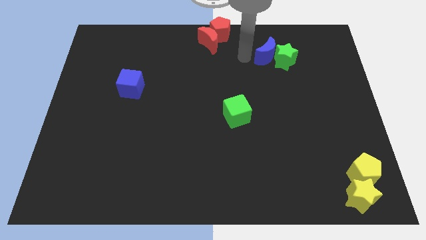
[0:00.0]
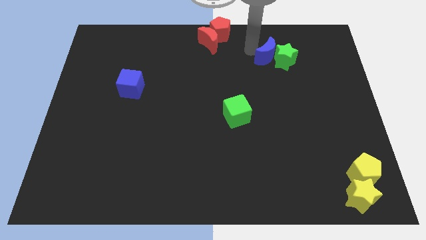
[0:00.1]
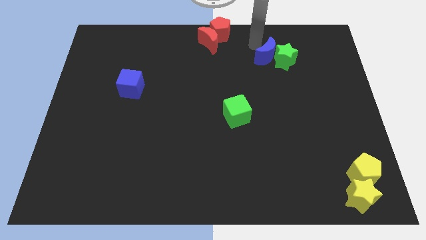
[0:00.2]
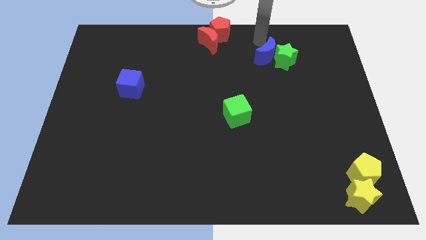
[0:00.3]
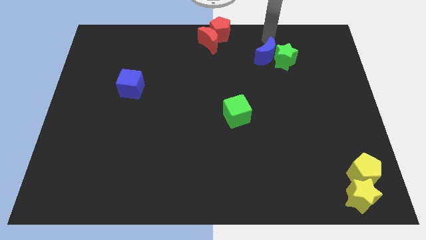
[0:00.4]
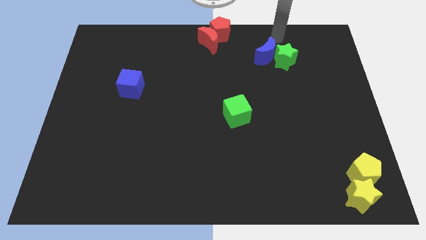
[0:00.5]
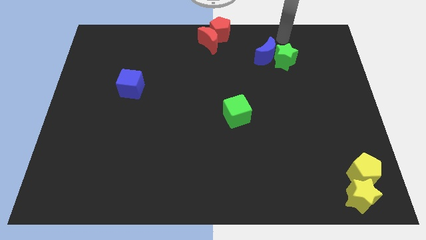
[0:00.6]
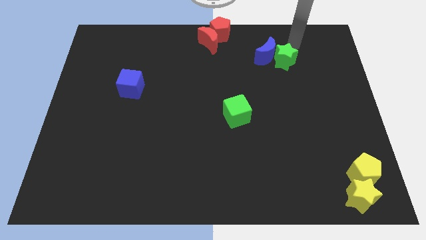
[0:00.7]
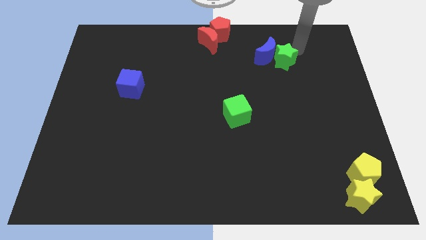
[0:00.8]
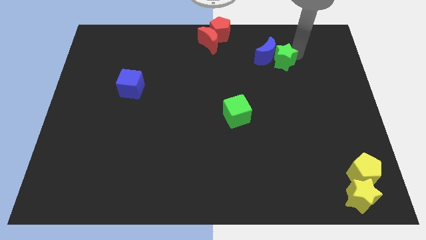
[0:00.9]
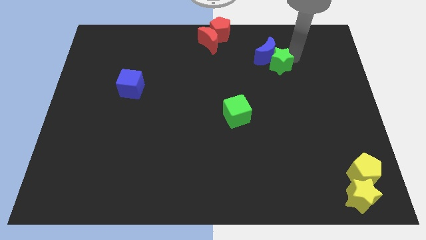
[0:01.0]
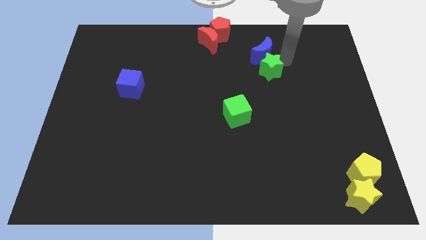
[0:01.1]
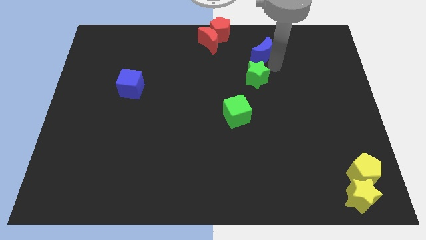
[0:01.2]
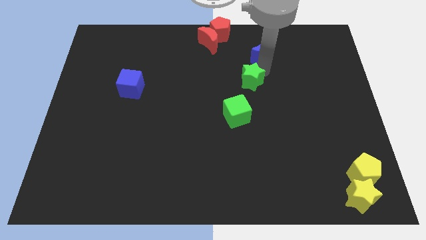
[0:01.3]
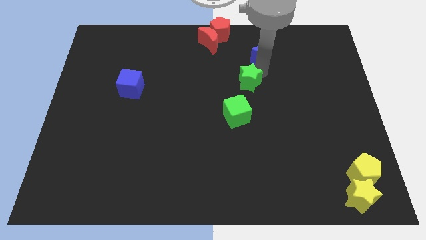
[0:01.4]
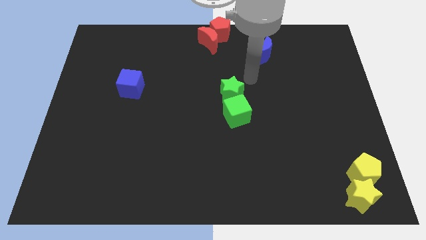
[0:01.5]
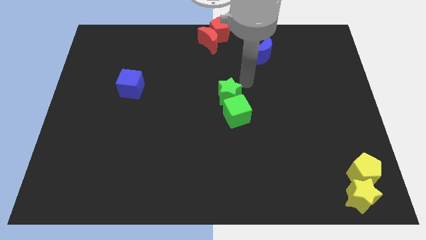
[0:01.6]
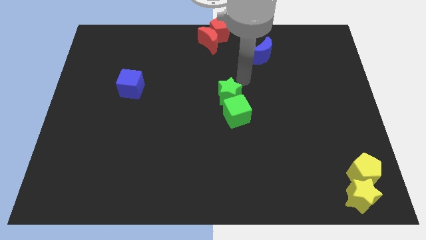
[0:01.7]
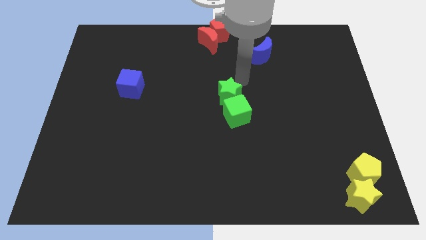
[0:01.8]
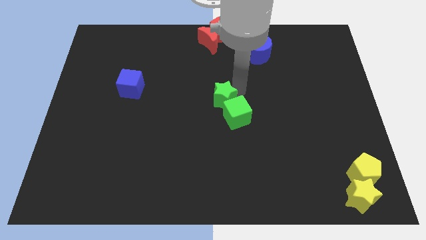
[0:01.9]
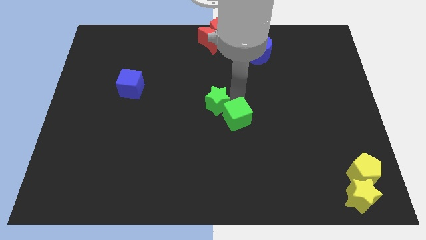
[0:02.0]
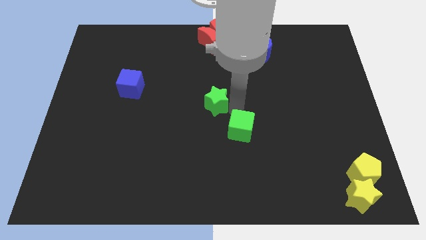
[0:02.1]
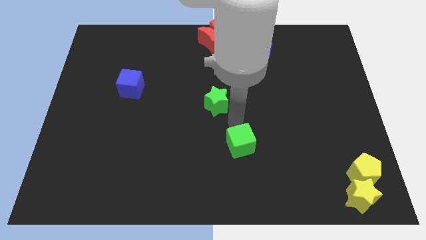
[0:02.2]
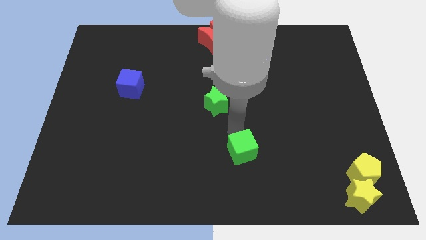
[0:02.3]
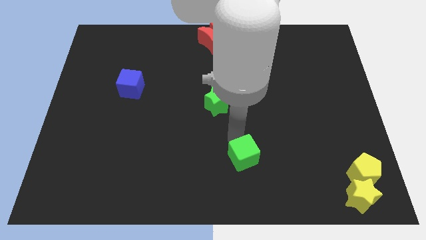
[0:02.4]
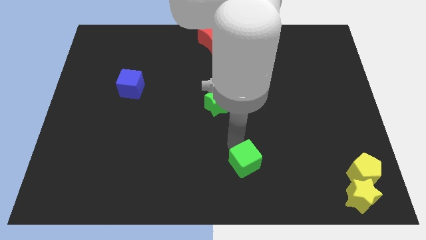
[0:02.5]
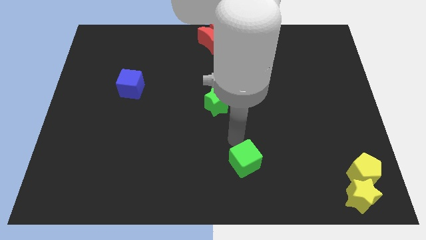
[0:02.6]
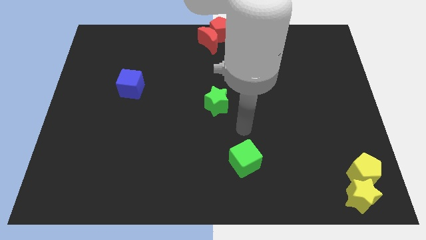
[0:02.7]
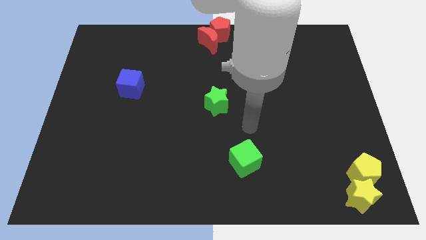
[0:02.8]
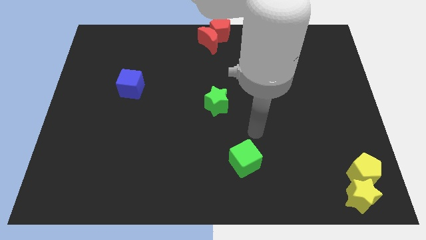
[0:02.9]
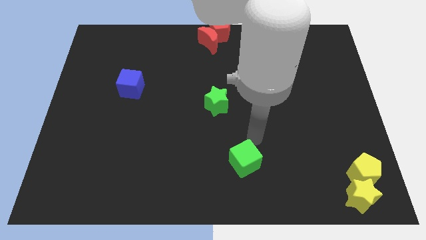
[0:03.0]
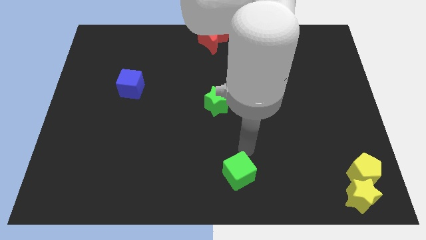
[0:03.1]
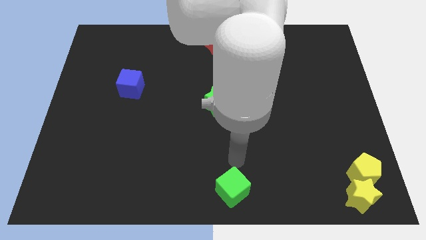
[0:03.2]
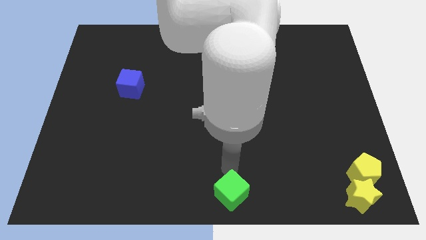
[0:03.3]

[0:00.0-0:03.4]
move the green cube to the bottom center

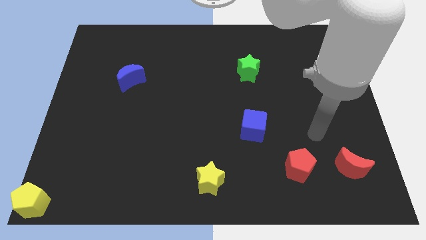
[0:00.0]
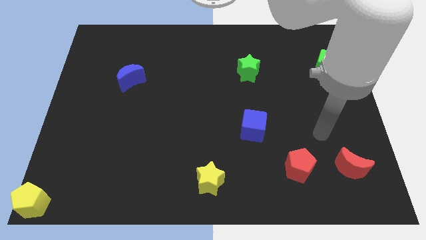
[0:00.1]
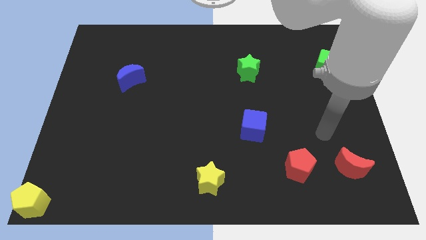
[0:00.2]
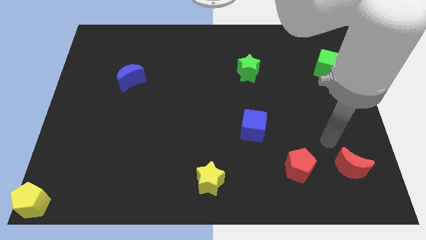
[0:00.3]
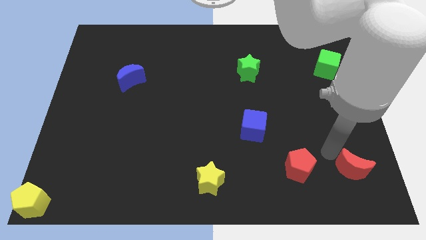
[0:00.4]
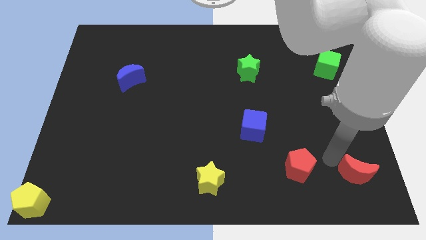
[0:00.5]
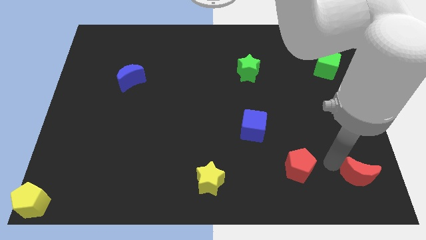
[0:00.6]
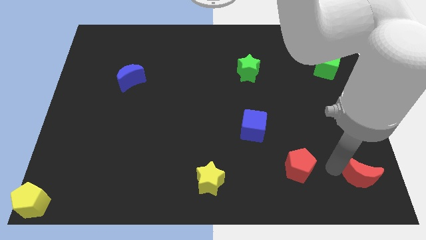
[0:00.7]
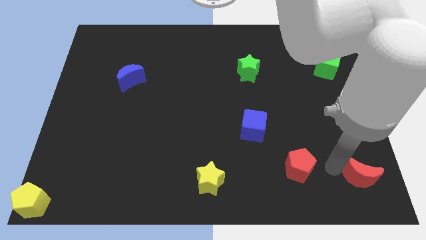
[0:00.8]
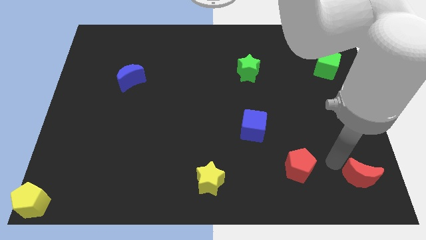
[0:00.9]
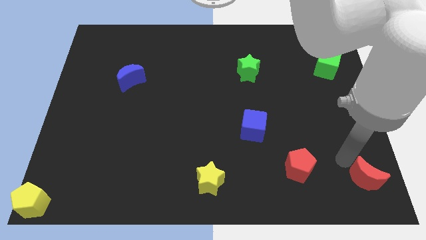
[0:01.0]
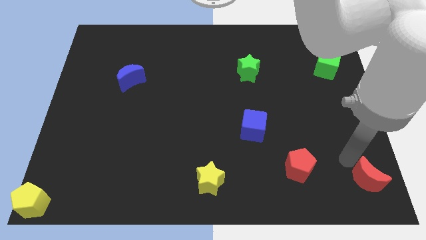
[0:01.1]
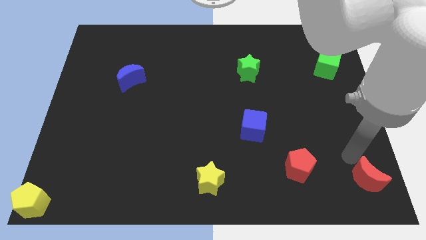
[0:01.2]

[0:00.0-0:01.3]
push the red crescent to the bottom right of the board

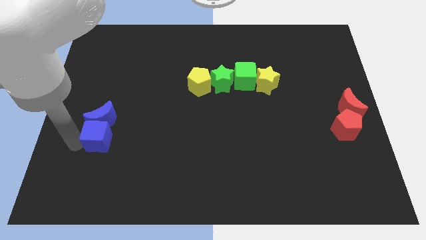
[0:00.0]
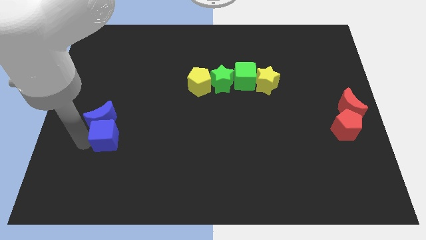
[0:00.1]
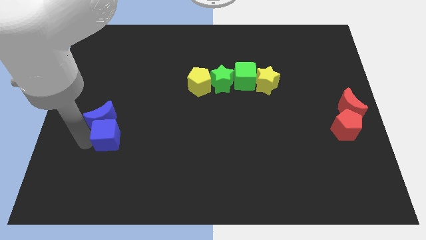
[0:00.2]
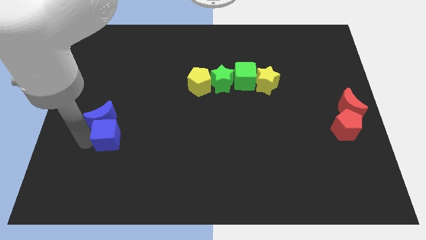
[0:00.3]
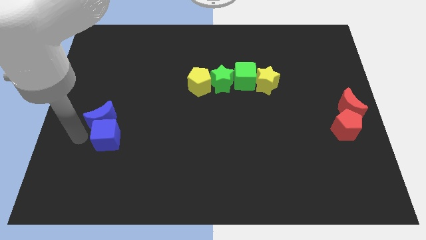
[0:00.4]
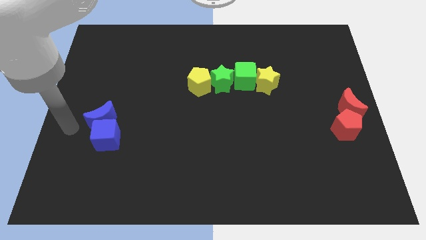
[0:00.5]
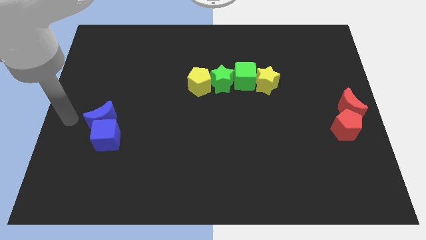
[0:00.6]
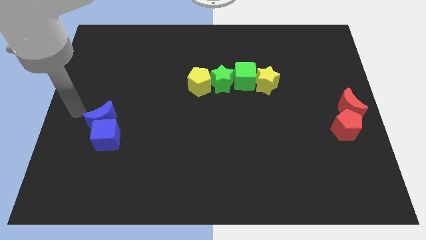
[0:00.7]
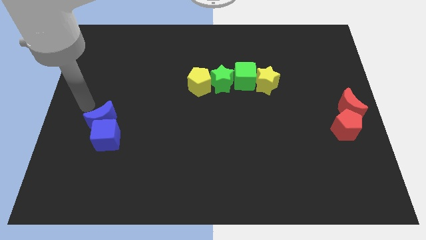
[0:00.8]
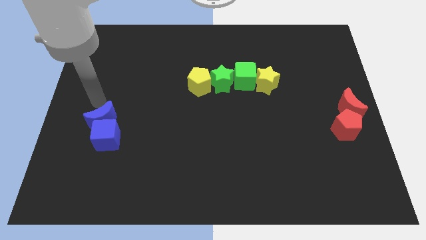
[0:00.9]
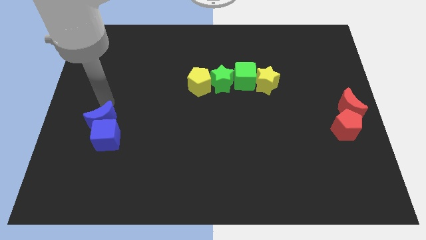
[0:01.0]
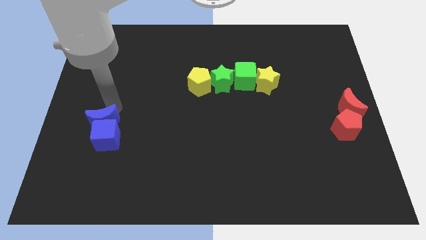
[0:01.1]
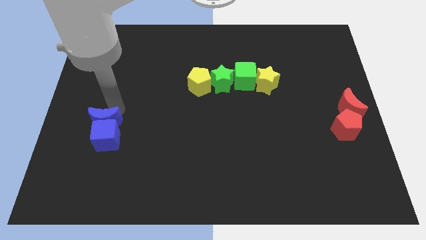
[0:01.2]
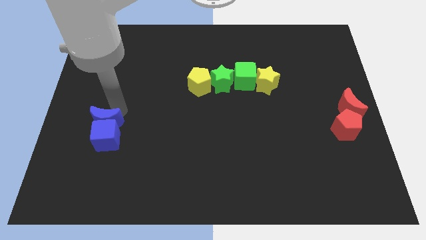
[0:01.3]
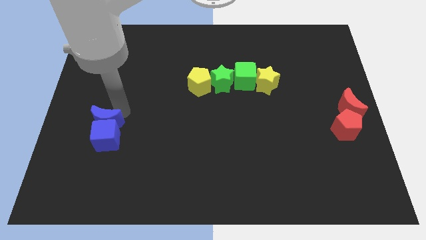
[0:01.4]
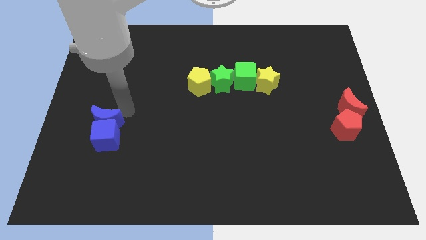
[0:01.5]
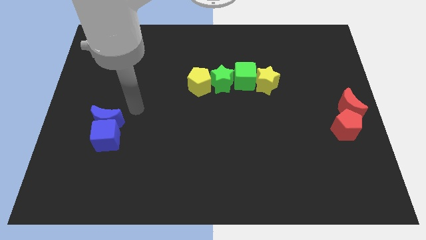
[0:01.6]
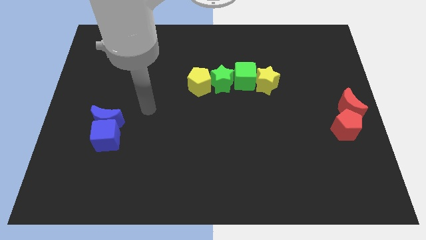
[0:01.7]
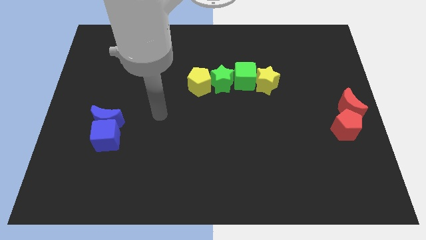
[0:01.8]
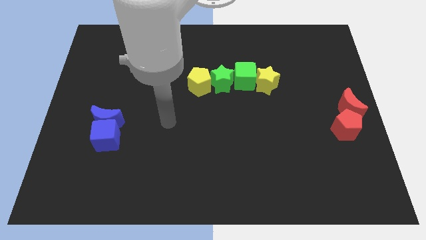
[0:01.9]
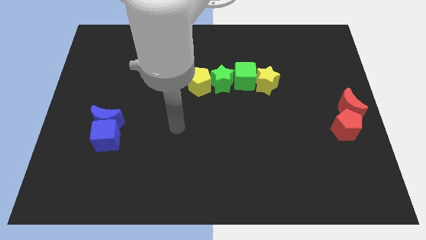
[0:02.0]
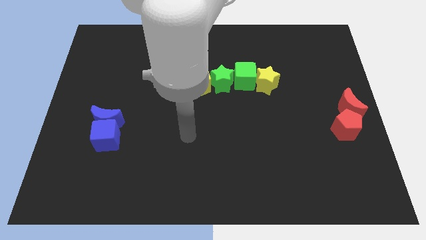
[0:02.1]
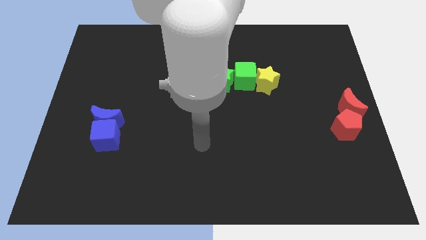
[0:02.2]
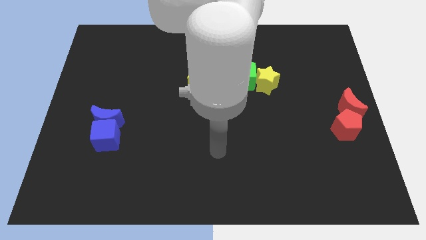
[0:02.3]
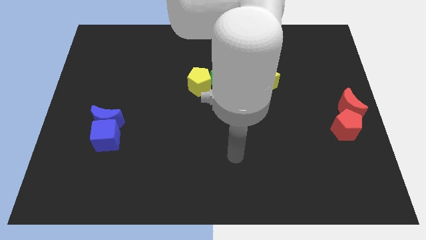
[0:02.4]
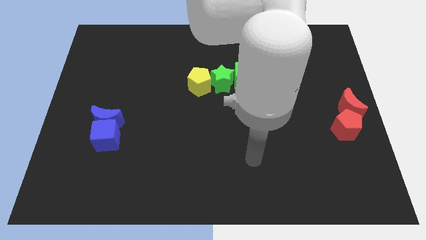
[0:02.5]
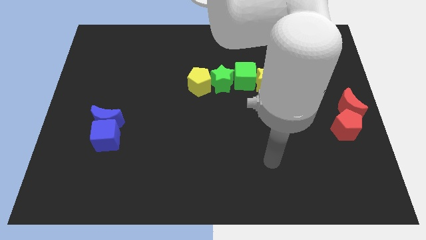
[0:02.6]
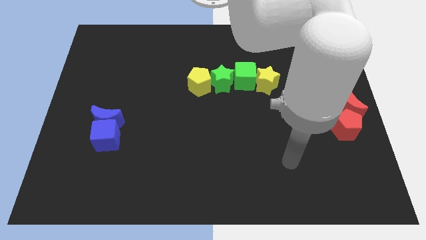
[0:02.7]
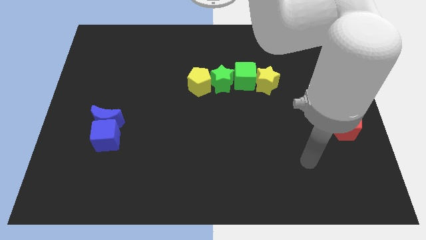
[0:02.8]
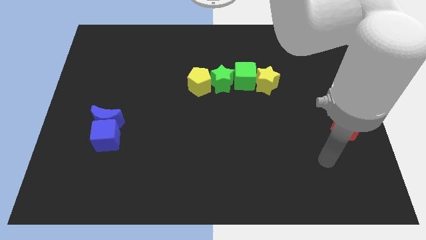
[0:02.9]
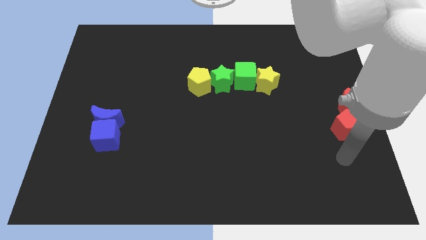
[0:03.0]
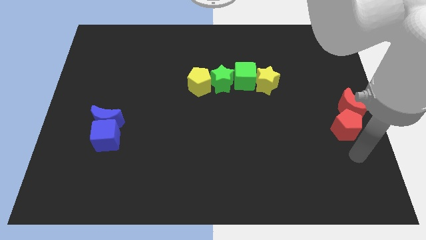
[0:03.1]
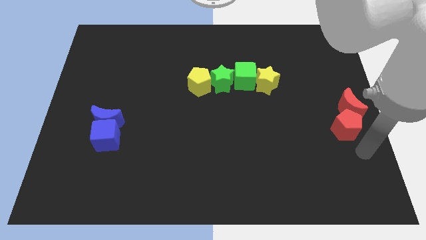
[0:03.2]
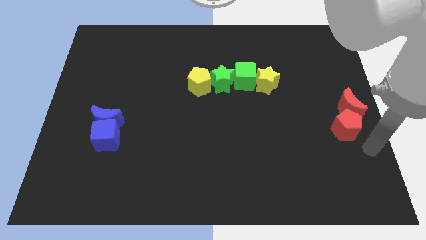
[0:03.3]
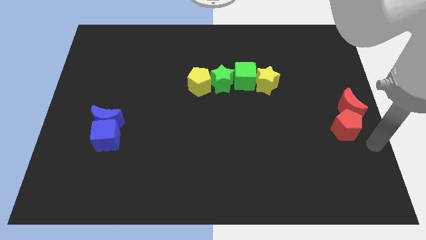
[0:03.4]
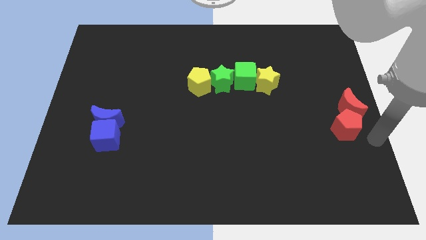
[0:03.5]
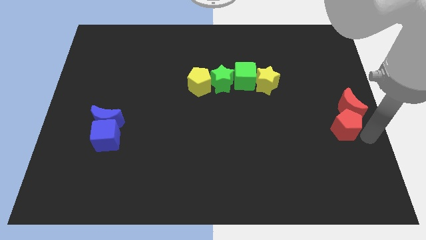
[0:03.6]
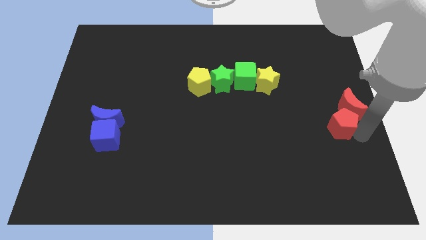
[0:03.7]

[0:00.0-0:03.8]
move your arm to the right side of the red pentagon

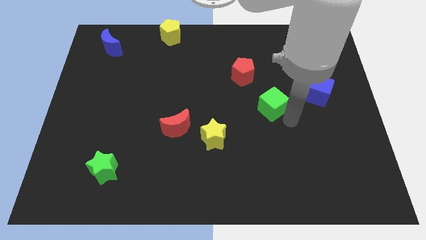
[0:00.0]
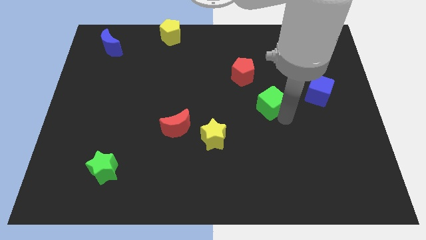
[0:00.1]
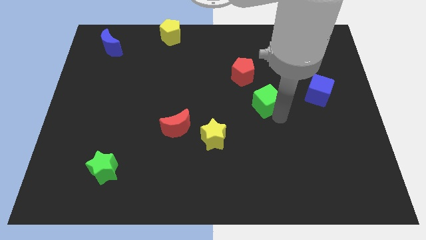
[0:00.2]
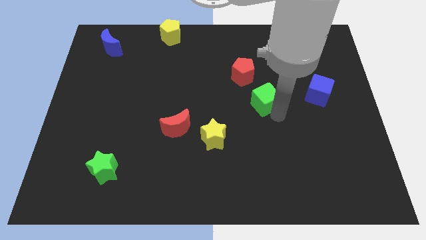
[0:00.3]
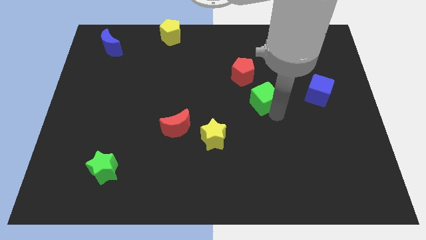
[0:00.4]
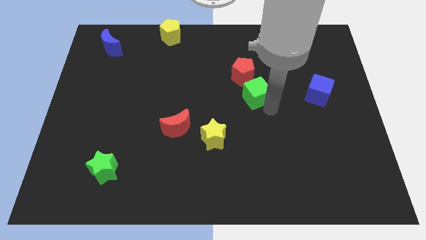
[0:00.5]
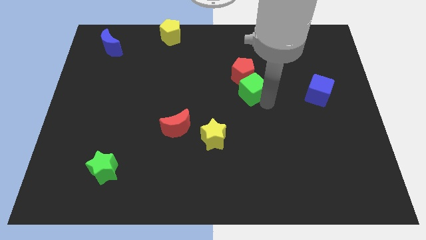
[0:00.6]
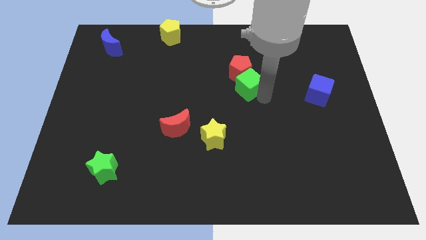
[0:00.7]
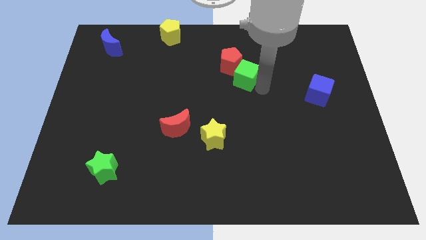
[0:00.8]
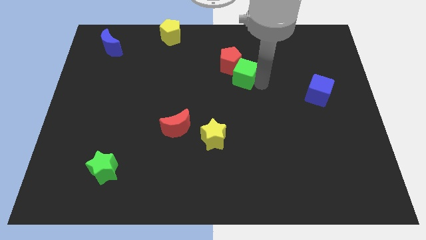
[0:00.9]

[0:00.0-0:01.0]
move the green cube into the red pentagon
